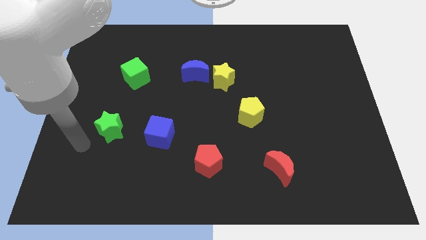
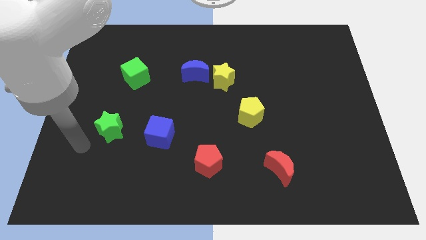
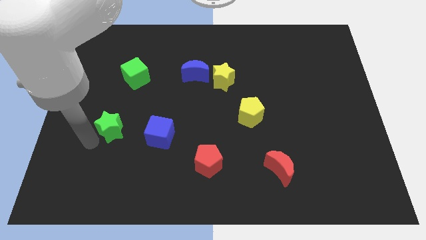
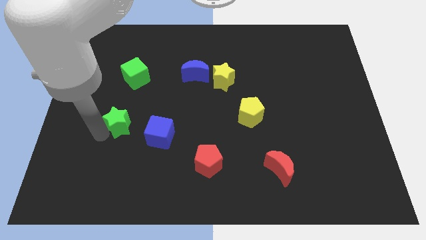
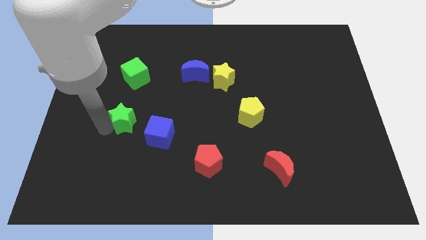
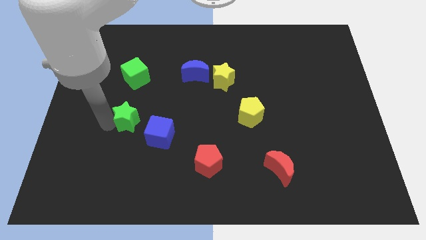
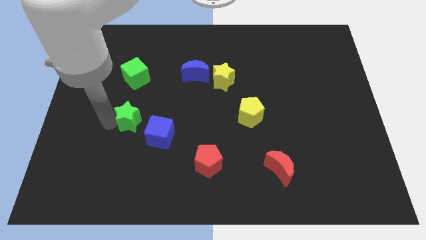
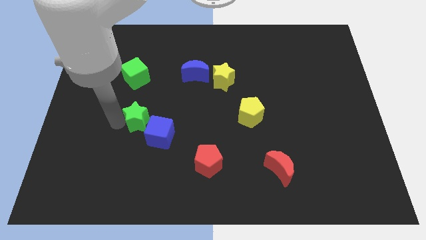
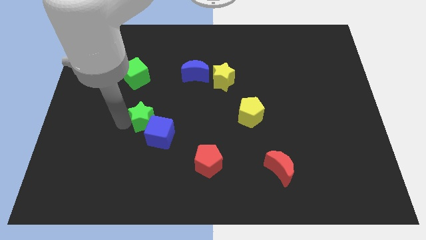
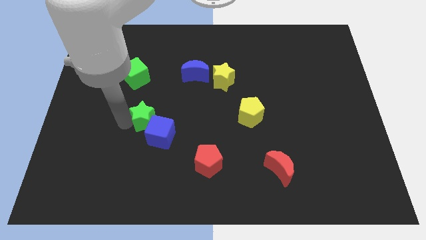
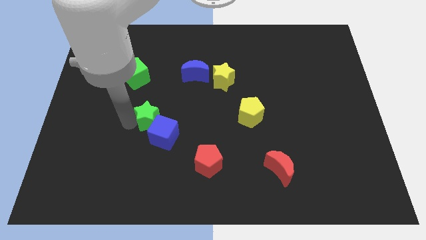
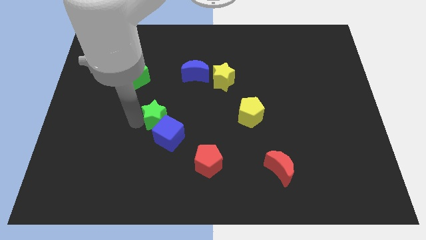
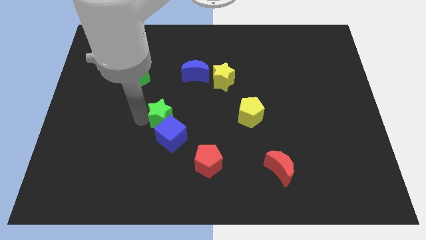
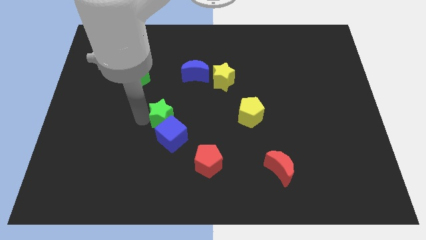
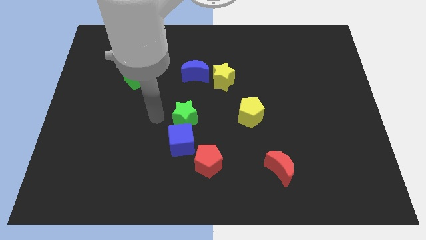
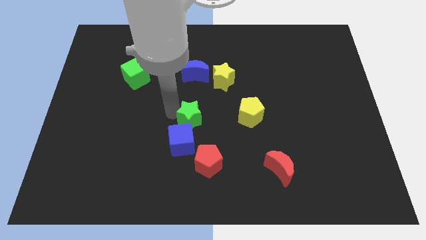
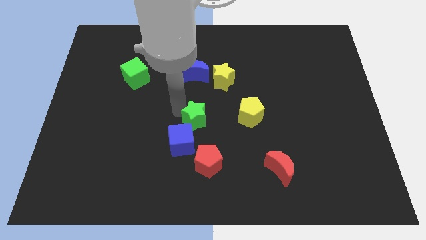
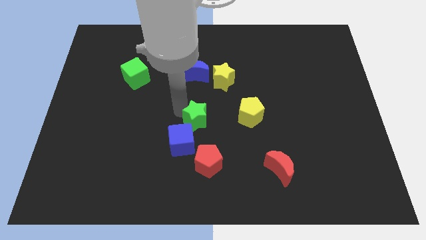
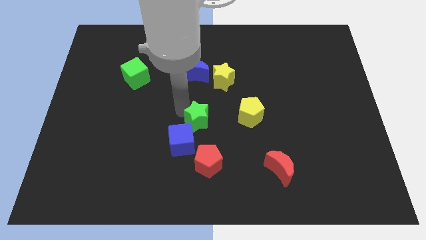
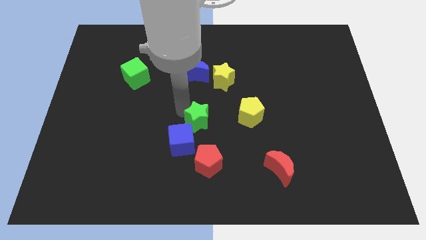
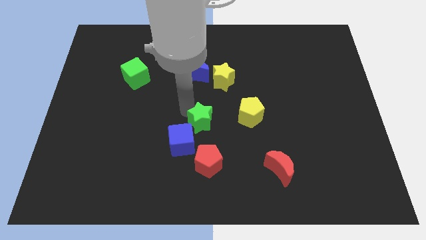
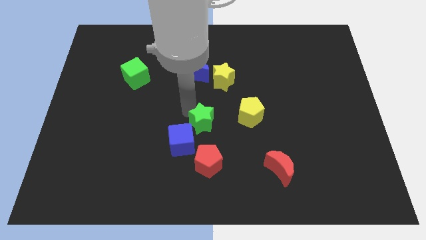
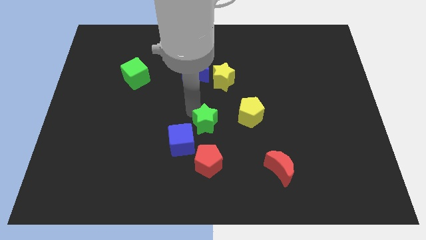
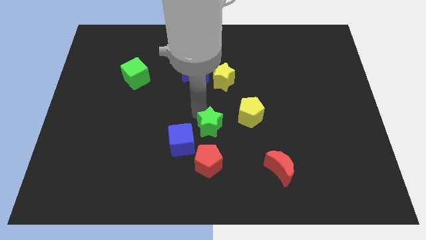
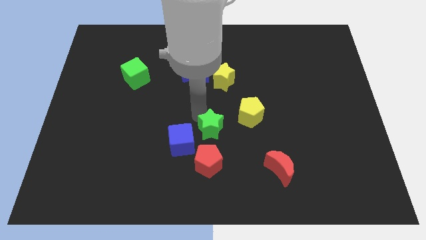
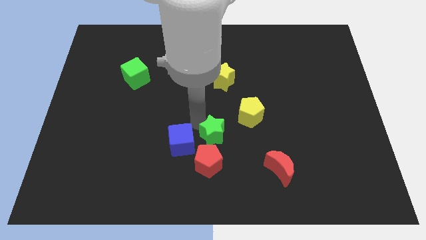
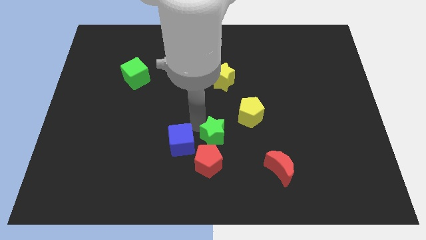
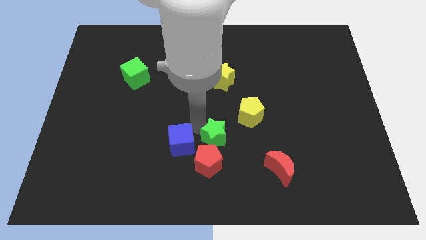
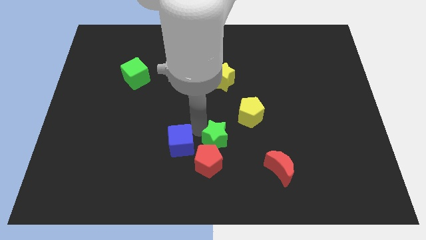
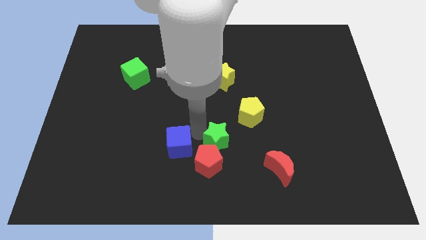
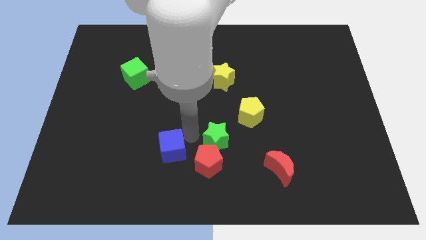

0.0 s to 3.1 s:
place the green star to the right side of the blue cube

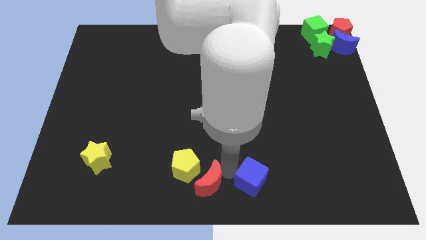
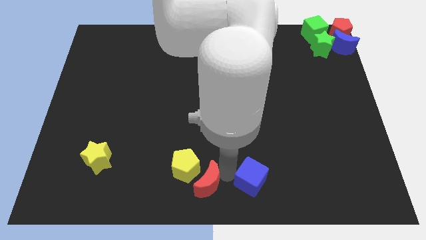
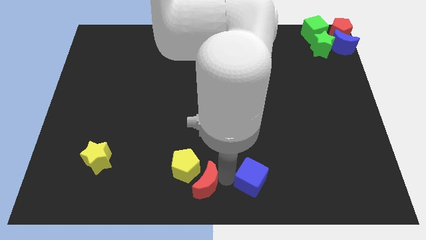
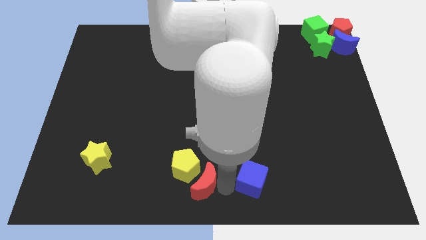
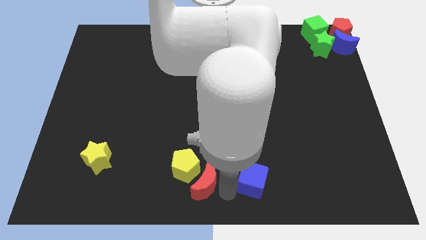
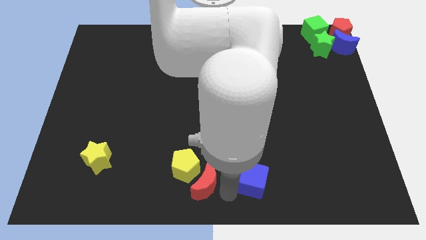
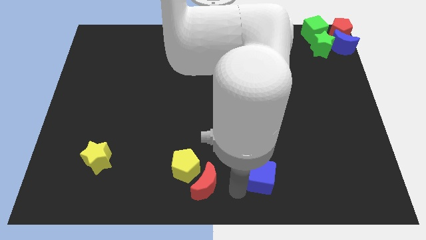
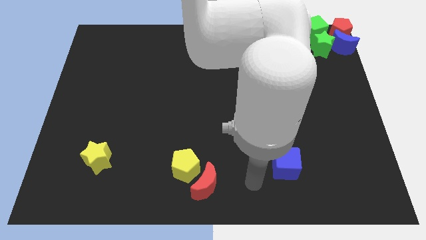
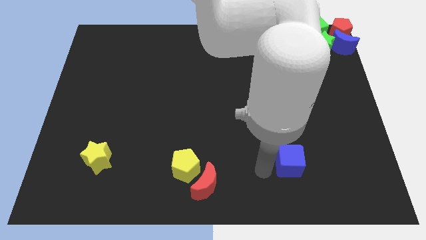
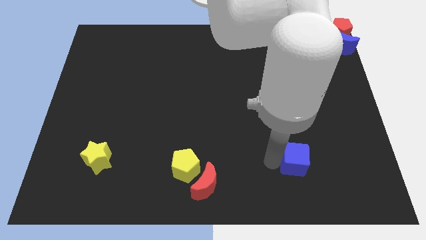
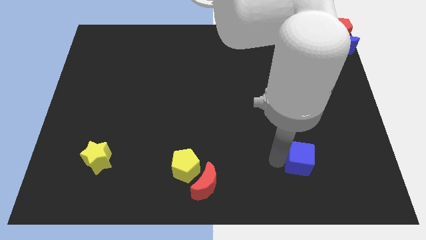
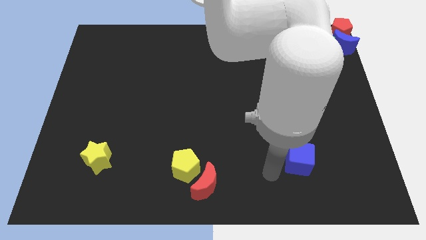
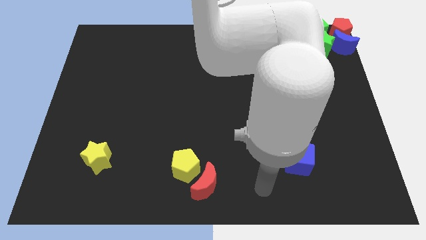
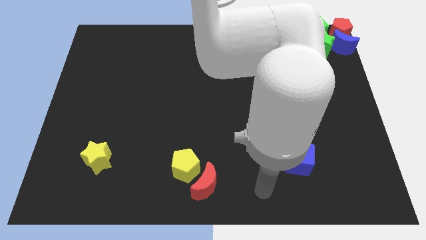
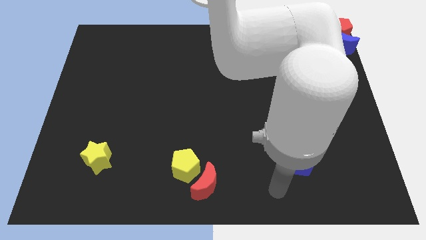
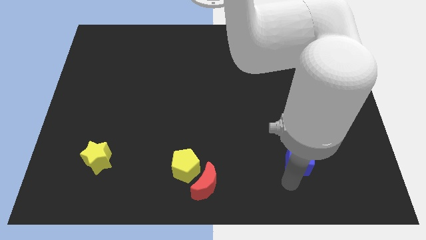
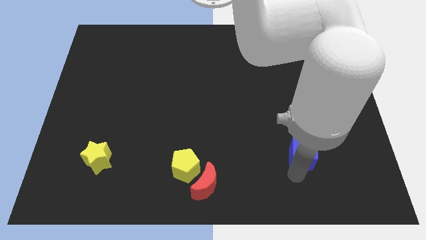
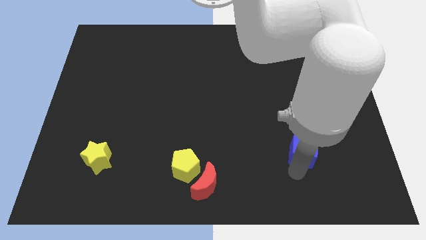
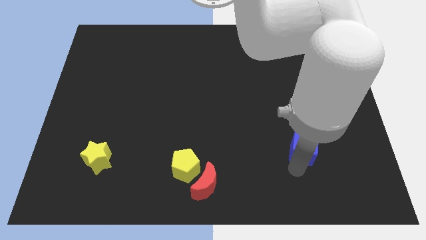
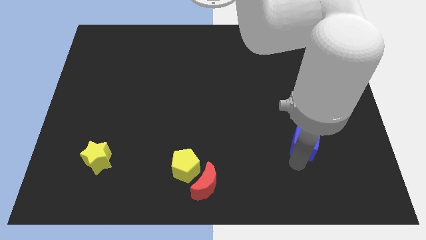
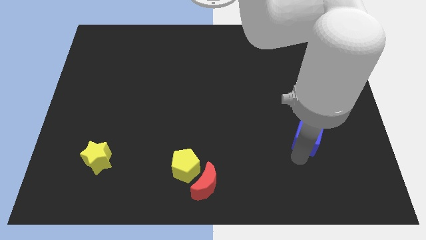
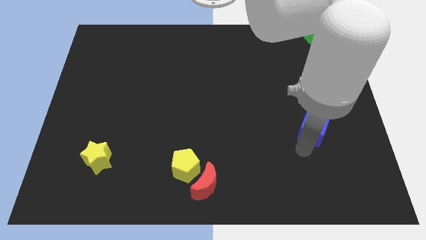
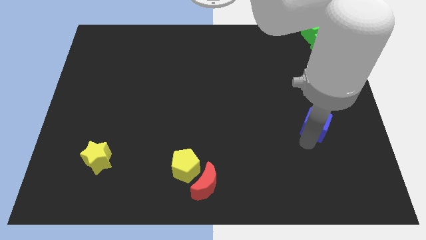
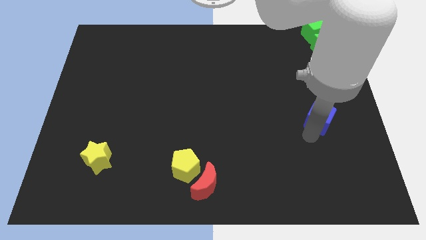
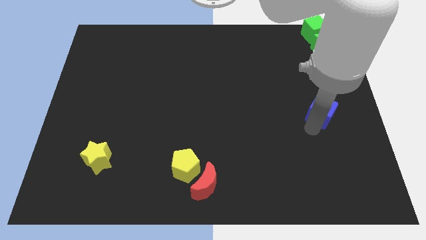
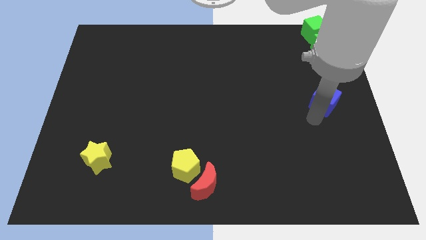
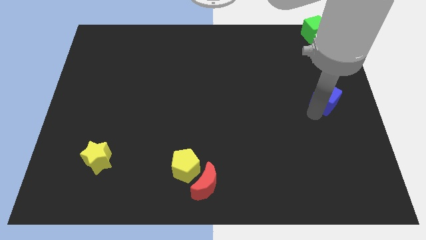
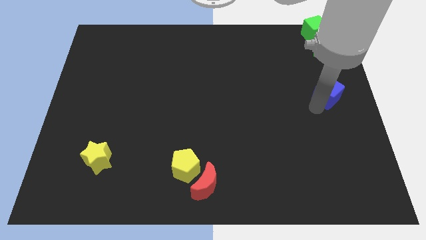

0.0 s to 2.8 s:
push the blue cube towards the top right of the board

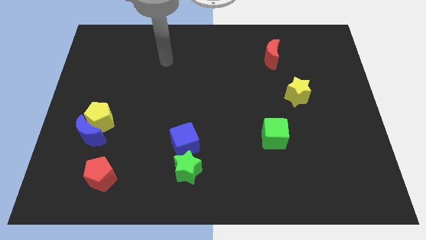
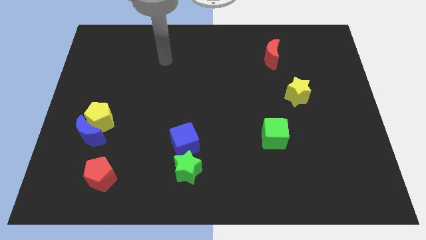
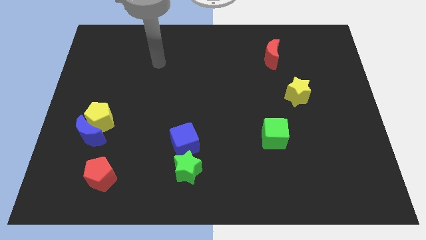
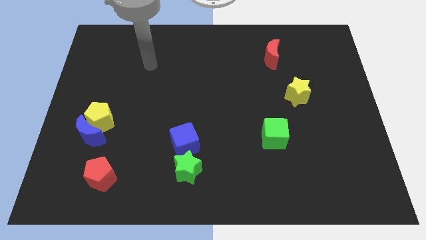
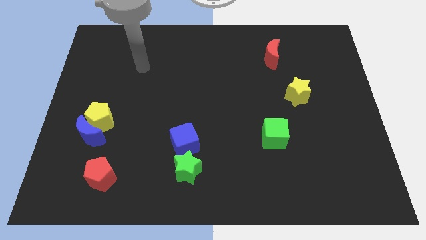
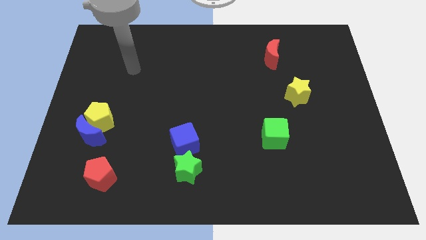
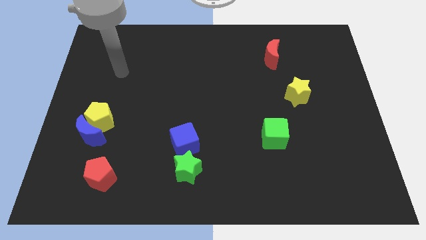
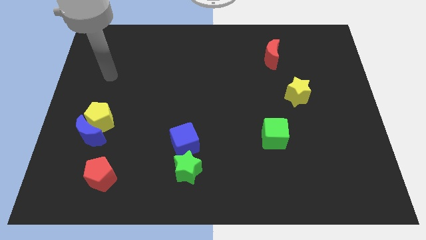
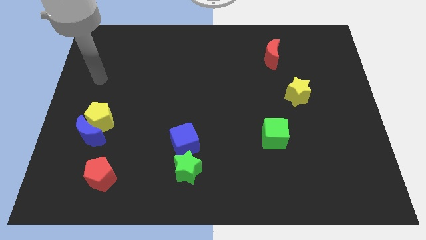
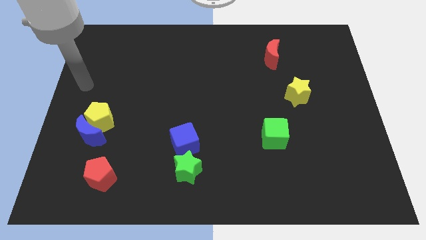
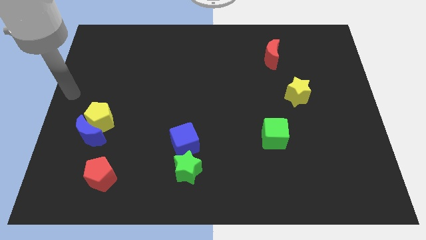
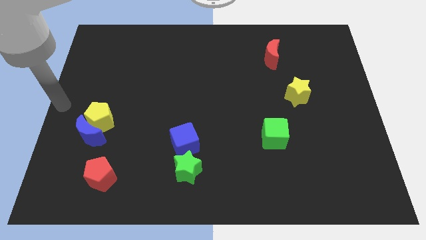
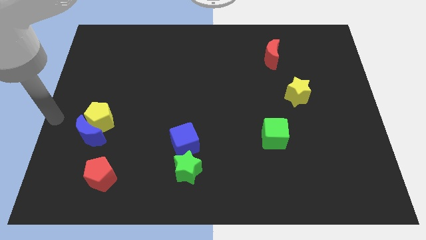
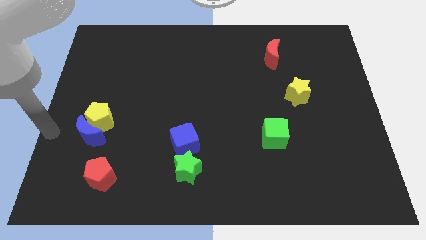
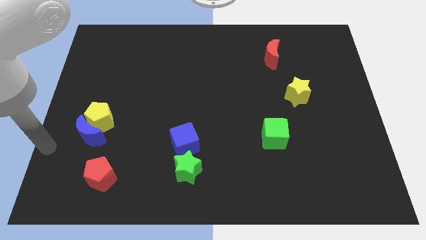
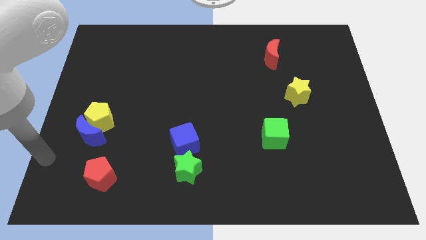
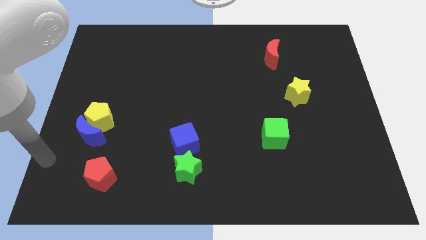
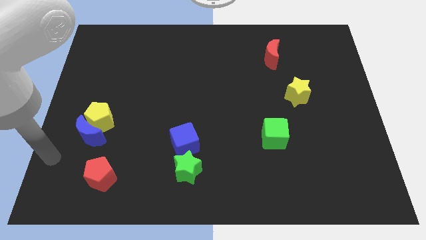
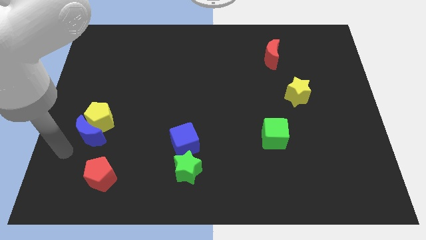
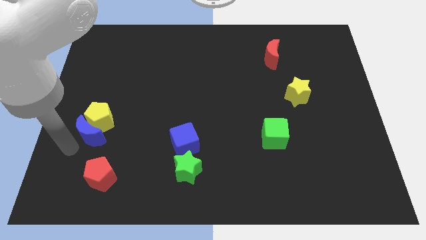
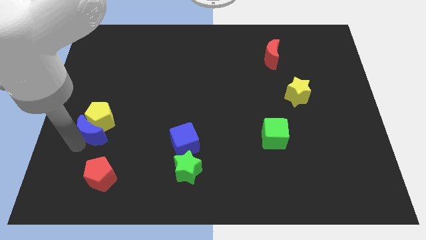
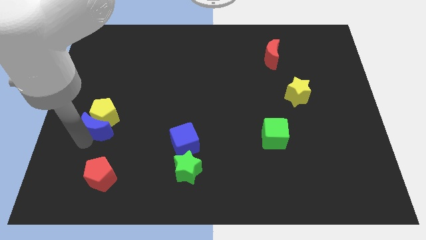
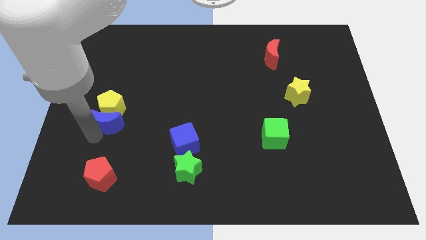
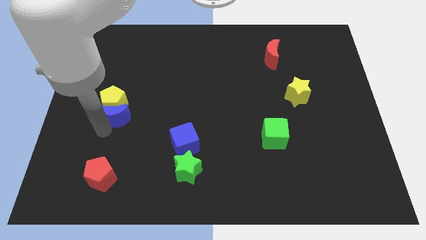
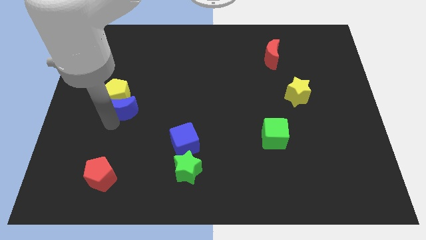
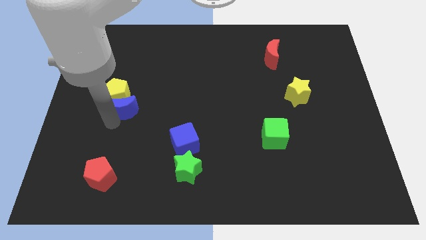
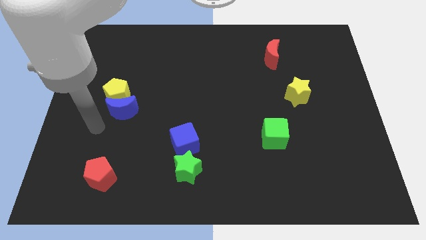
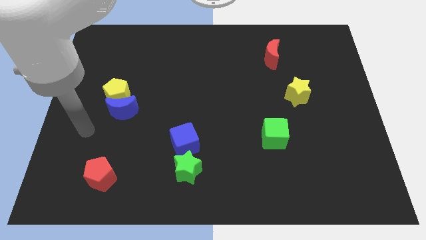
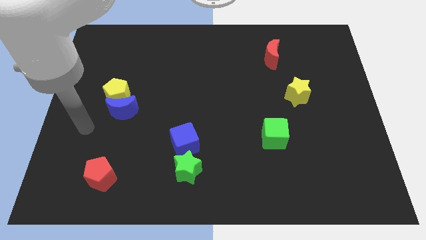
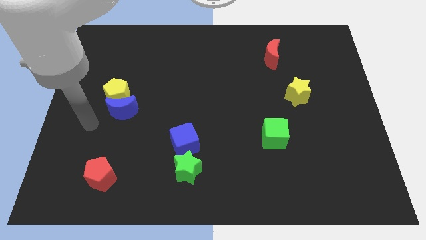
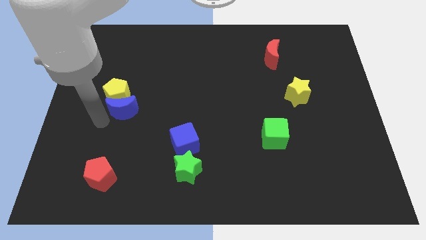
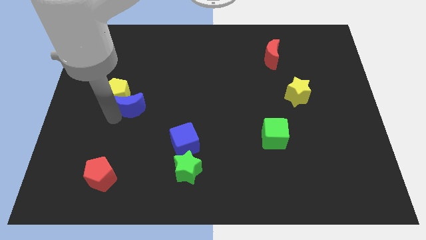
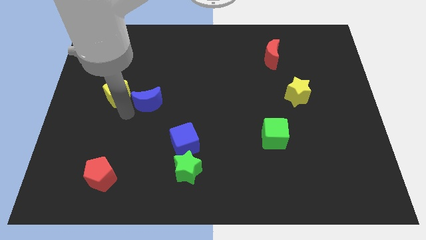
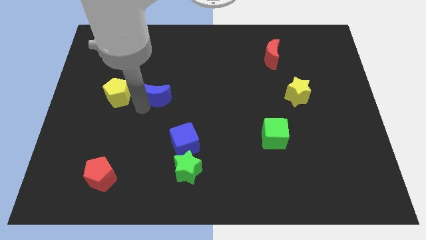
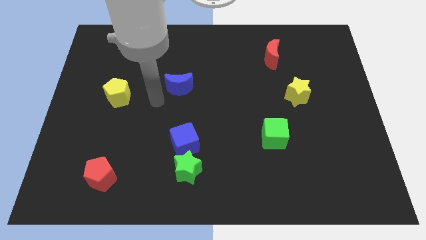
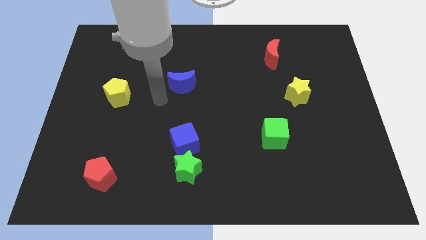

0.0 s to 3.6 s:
separate the blue crescent and yellow pentagon
